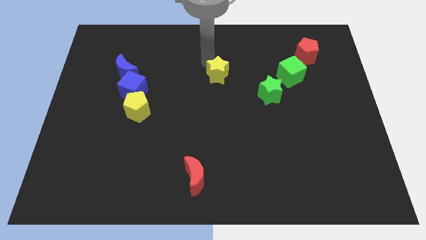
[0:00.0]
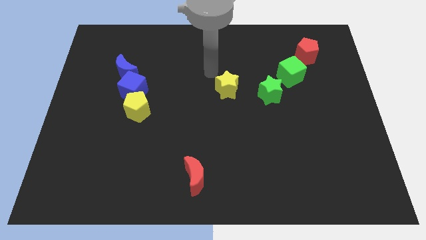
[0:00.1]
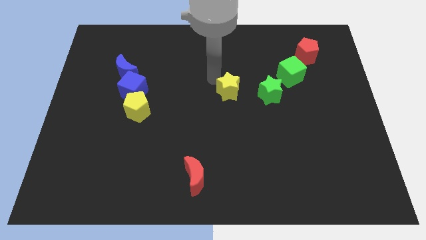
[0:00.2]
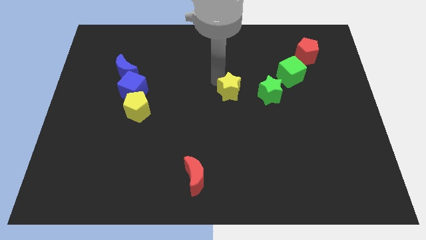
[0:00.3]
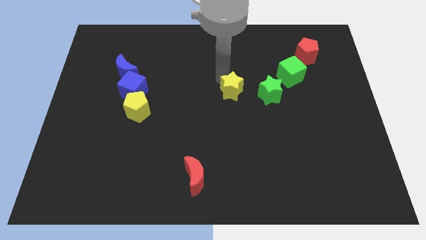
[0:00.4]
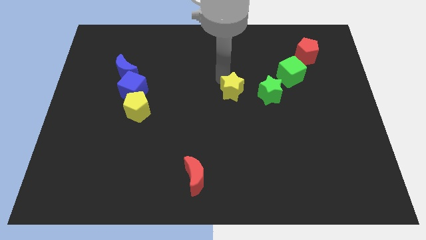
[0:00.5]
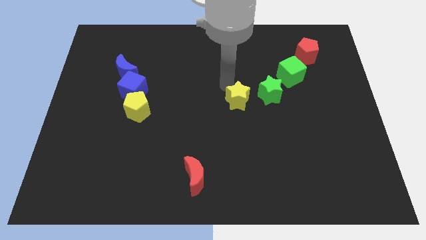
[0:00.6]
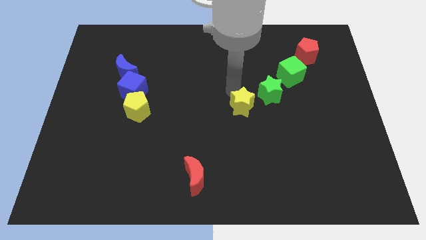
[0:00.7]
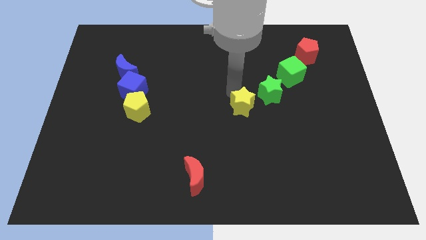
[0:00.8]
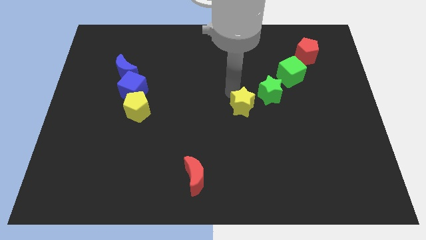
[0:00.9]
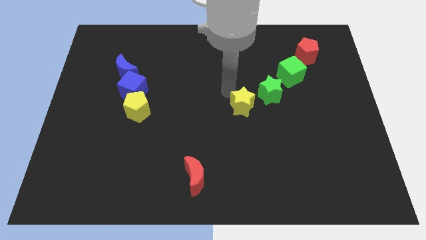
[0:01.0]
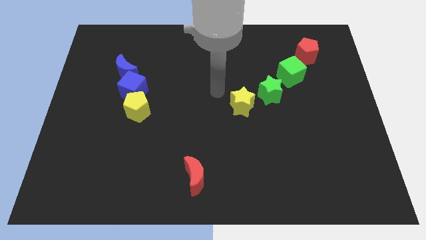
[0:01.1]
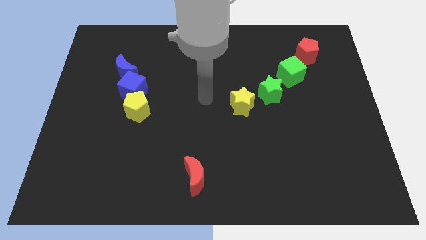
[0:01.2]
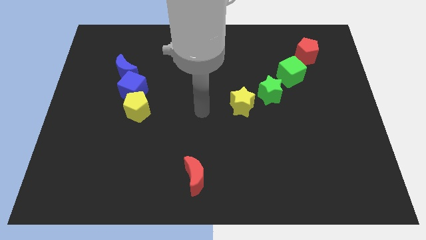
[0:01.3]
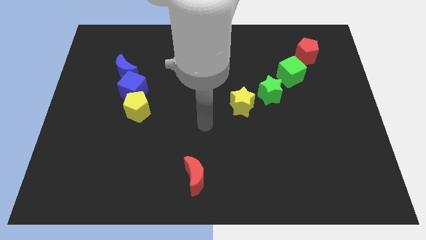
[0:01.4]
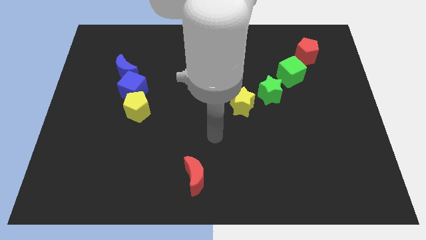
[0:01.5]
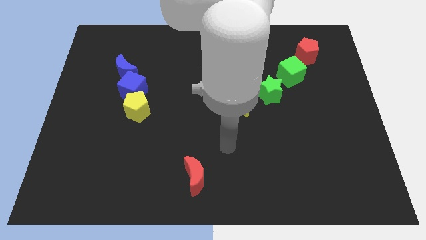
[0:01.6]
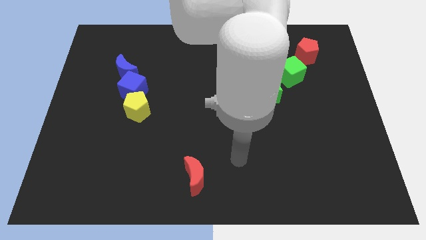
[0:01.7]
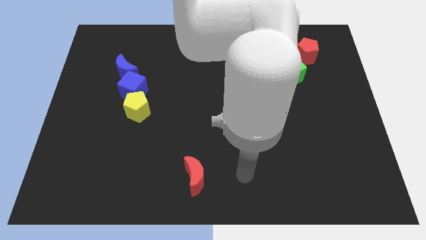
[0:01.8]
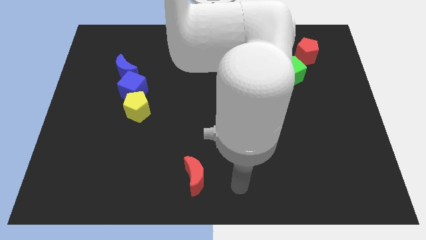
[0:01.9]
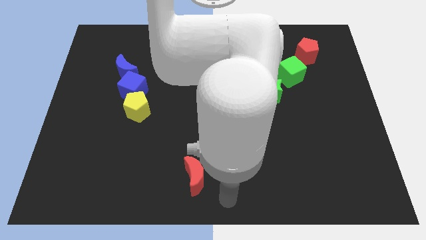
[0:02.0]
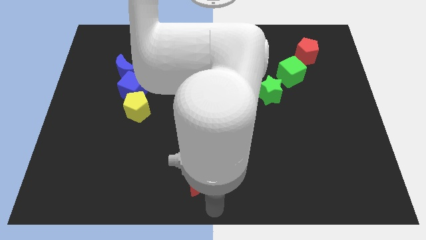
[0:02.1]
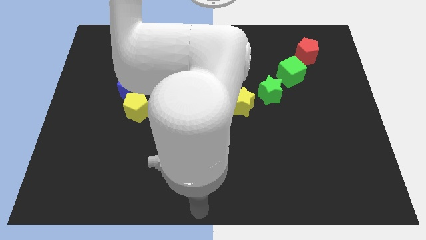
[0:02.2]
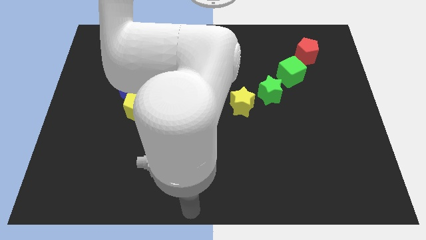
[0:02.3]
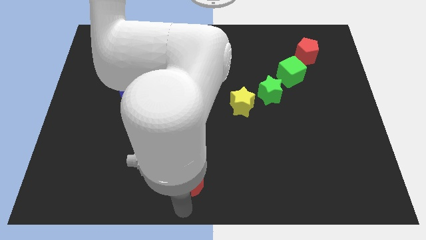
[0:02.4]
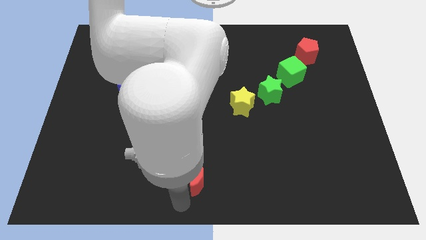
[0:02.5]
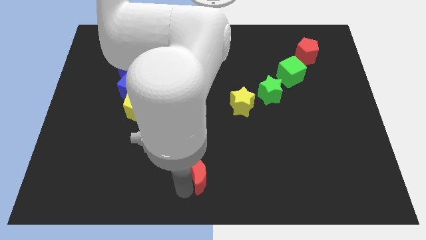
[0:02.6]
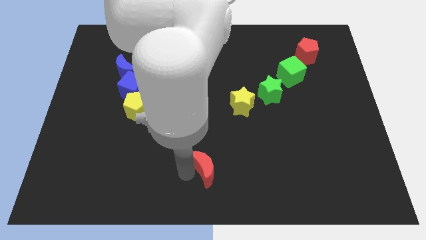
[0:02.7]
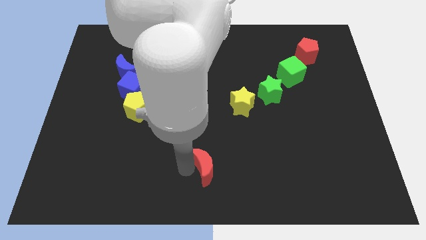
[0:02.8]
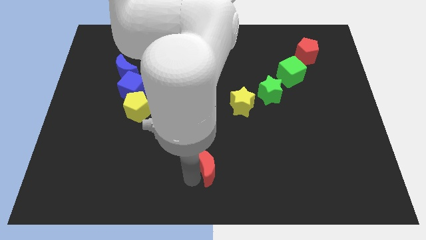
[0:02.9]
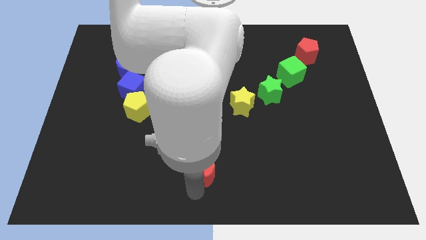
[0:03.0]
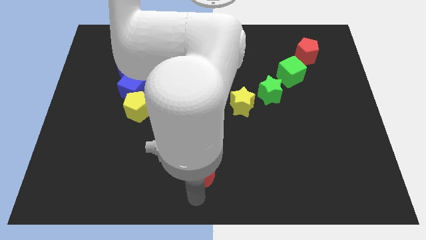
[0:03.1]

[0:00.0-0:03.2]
place your arm below red moon

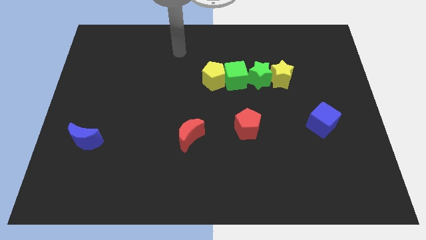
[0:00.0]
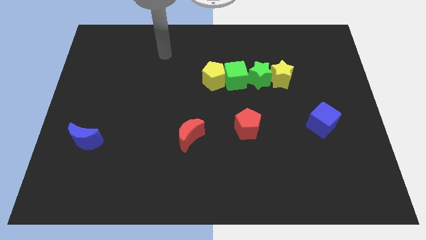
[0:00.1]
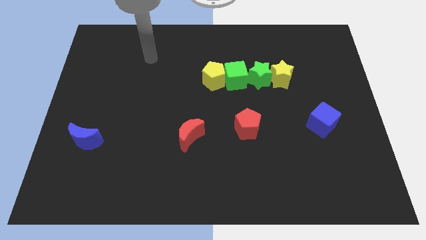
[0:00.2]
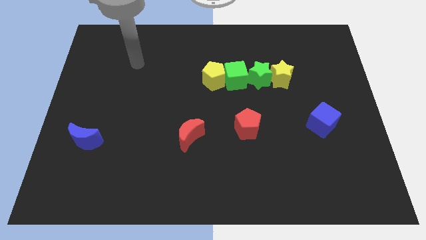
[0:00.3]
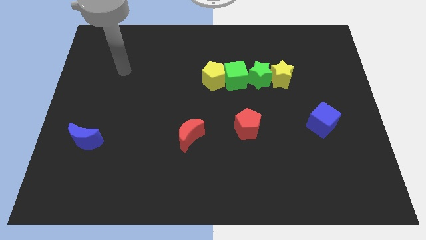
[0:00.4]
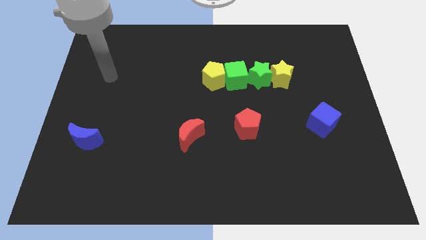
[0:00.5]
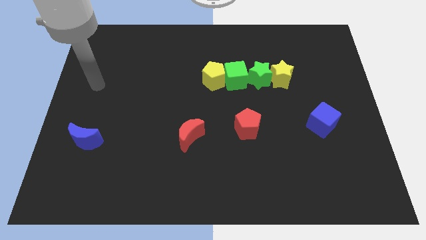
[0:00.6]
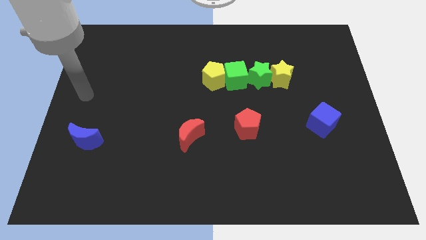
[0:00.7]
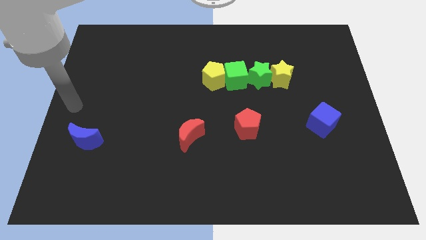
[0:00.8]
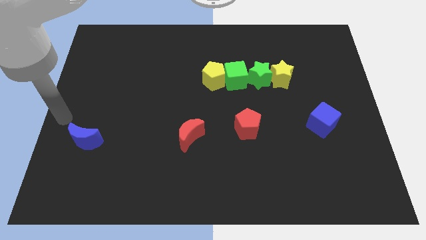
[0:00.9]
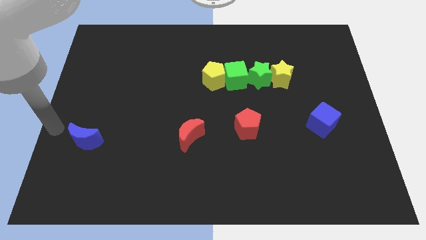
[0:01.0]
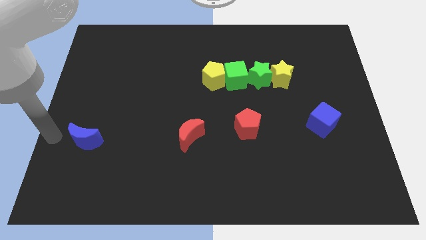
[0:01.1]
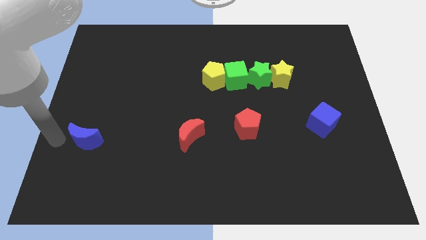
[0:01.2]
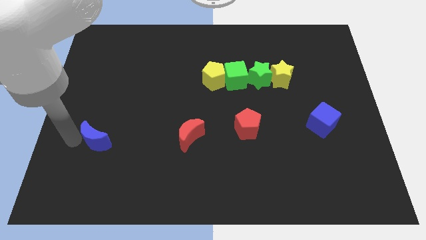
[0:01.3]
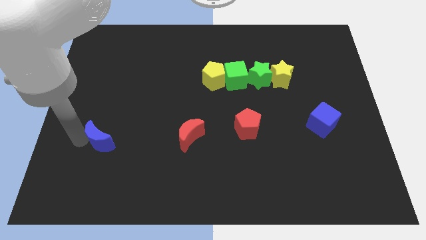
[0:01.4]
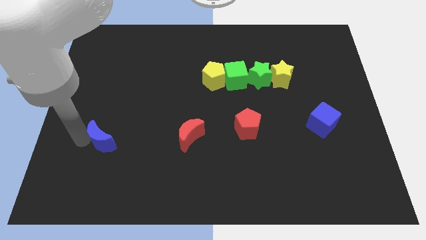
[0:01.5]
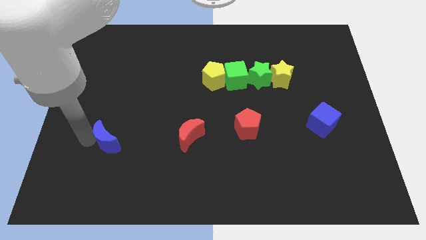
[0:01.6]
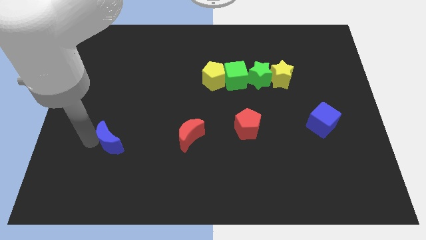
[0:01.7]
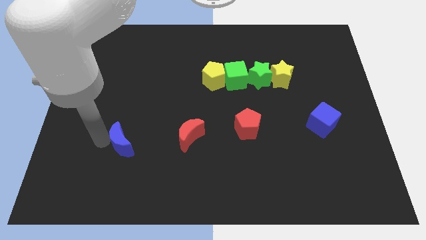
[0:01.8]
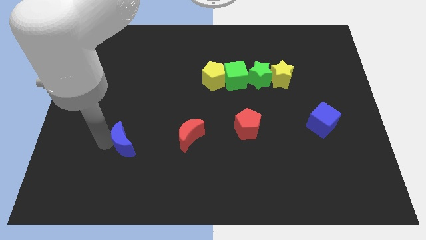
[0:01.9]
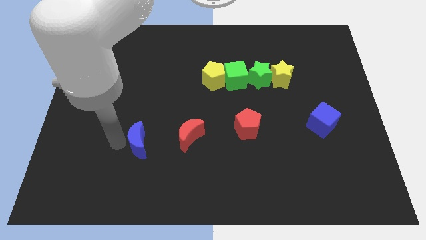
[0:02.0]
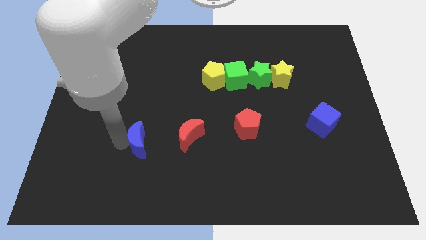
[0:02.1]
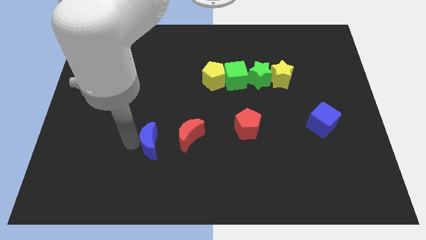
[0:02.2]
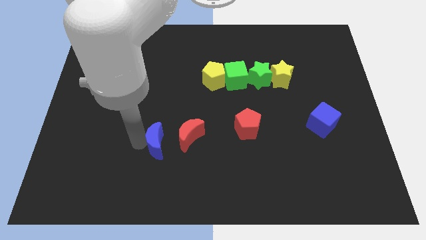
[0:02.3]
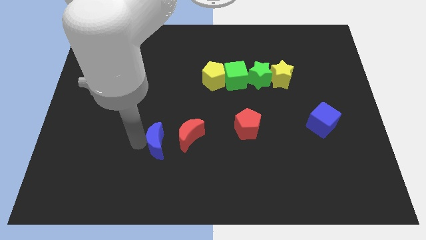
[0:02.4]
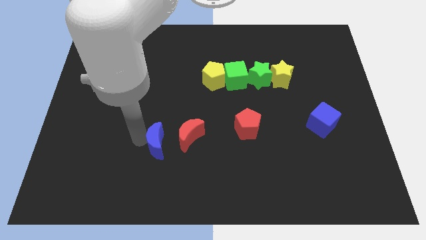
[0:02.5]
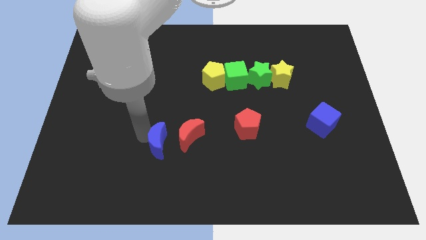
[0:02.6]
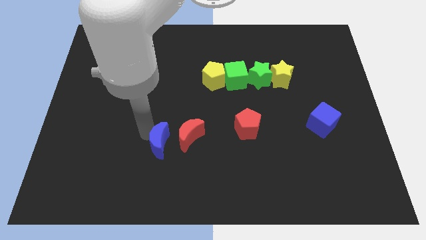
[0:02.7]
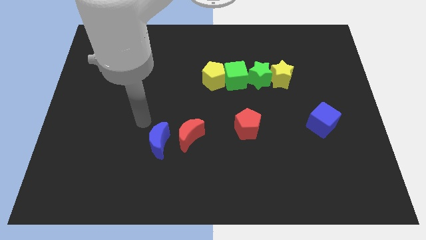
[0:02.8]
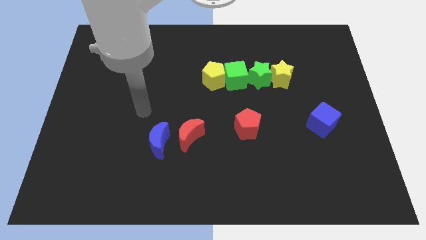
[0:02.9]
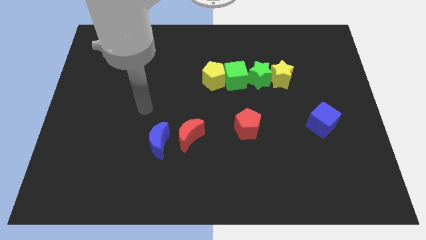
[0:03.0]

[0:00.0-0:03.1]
move the blue crescent to the left of the red crescent

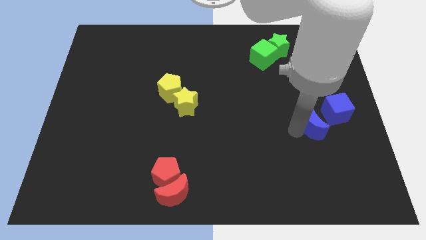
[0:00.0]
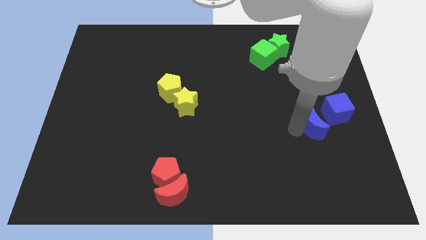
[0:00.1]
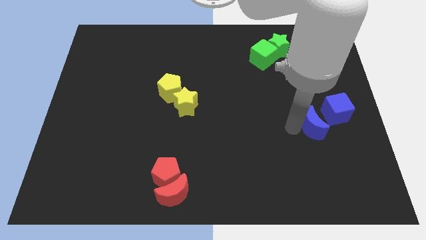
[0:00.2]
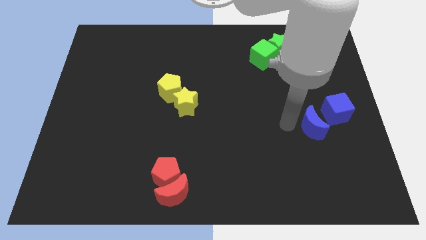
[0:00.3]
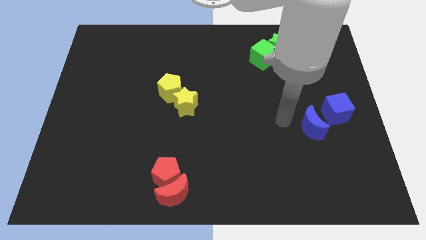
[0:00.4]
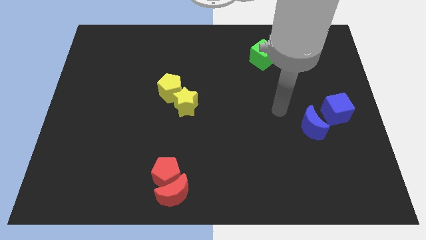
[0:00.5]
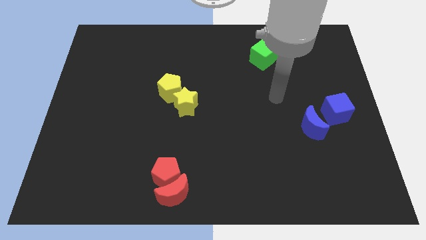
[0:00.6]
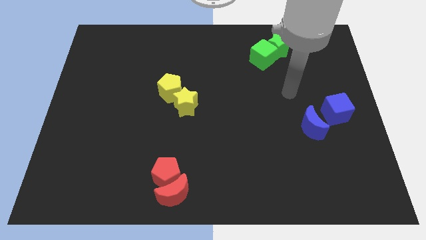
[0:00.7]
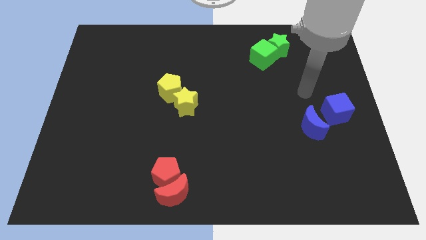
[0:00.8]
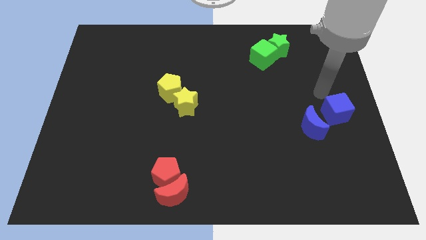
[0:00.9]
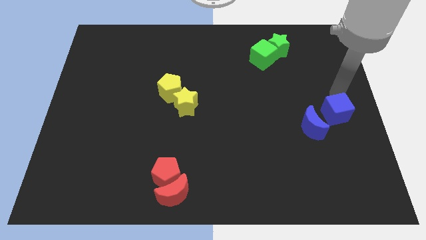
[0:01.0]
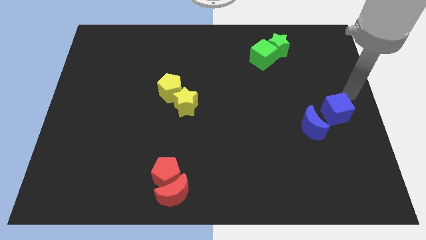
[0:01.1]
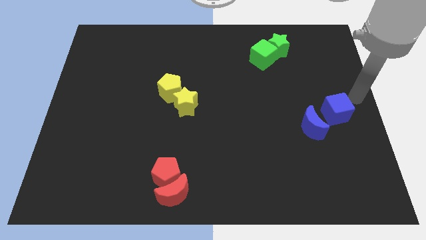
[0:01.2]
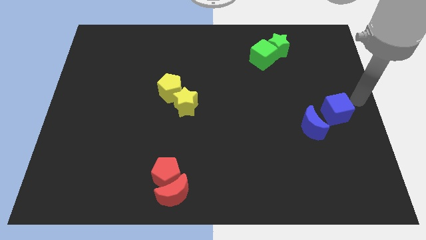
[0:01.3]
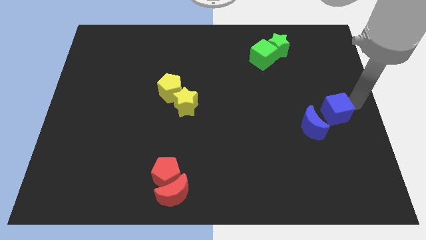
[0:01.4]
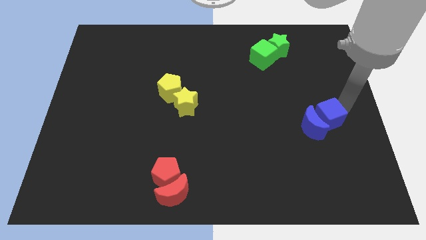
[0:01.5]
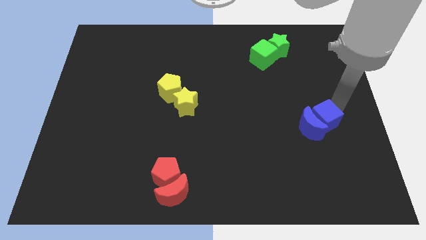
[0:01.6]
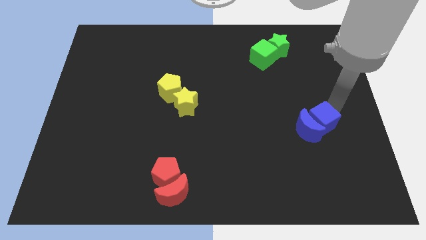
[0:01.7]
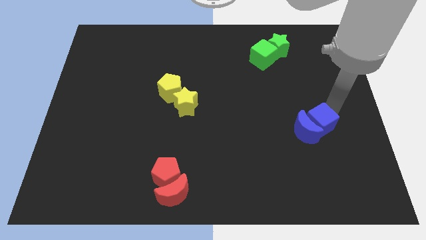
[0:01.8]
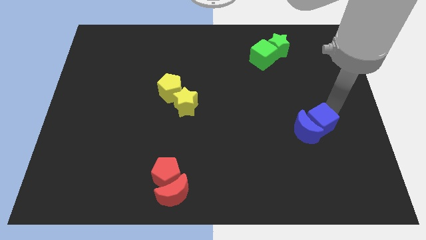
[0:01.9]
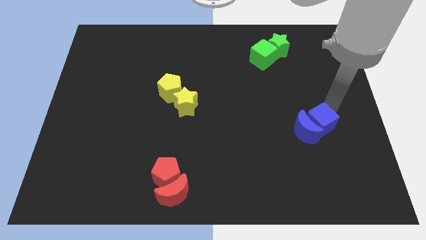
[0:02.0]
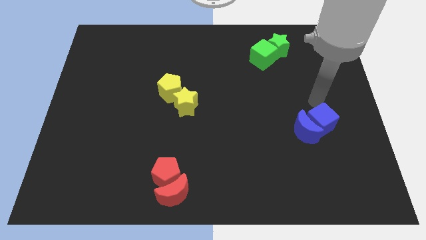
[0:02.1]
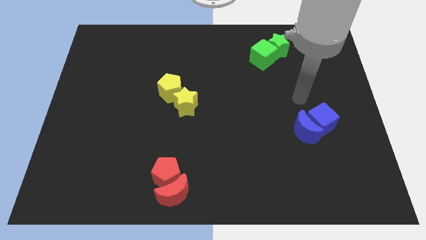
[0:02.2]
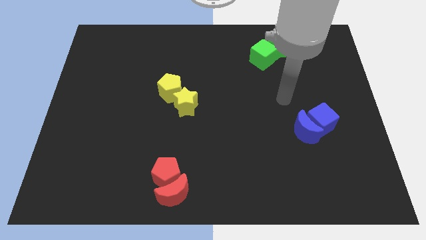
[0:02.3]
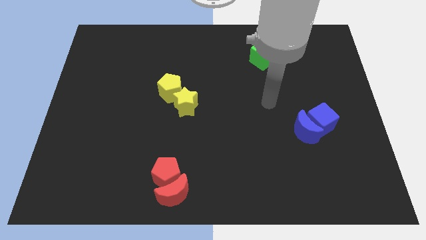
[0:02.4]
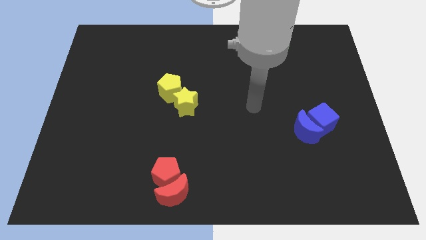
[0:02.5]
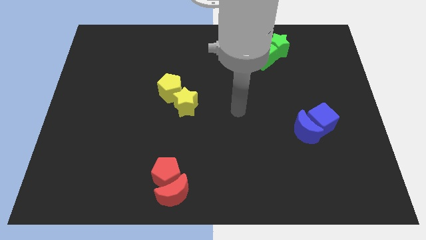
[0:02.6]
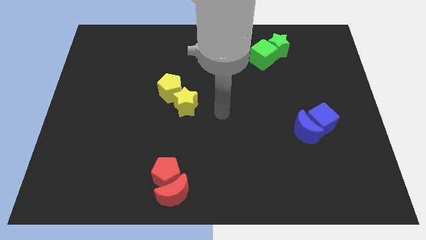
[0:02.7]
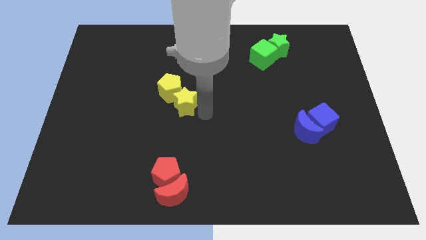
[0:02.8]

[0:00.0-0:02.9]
push the blue cube into the blue moon
